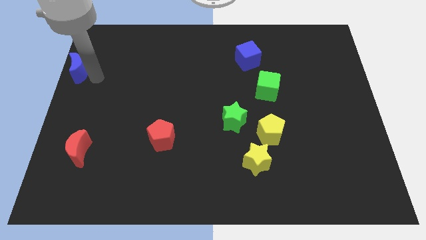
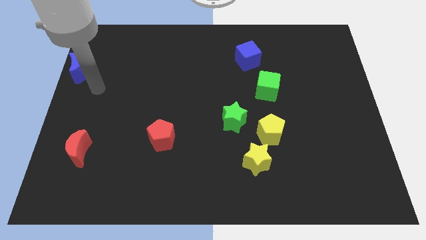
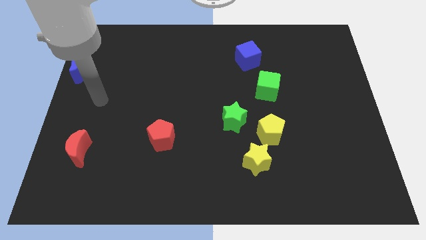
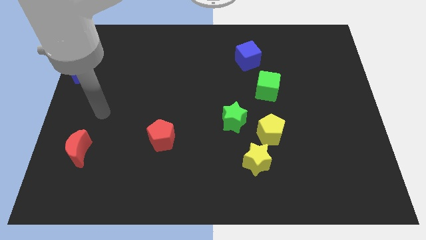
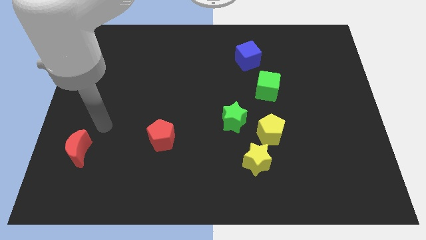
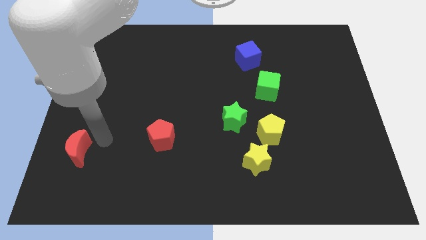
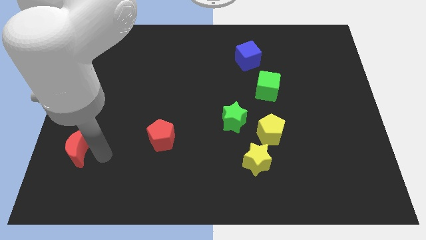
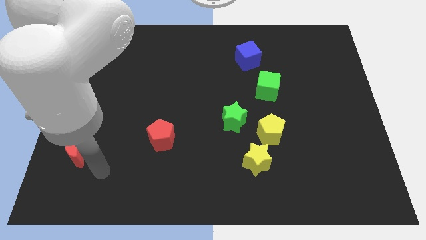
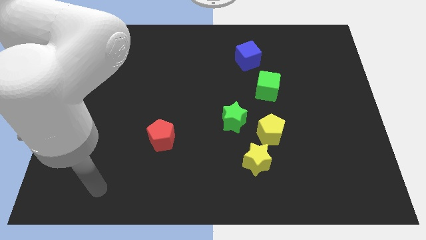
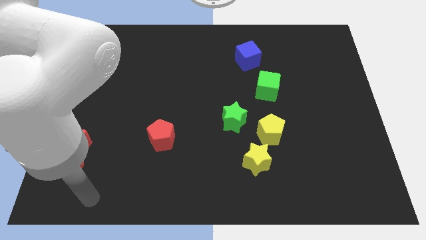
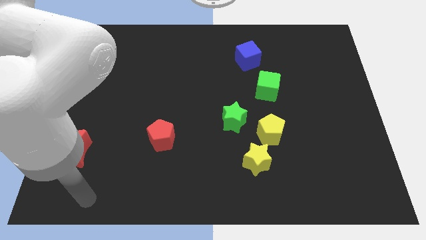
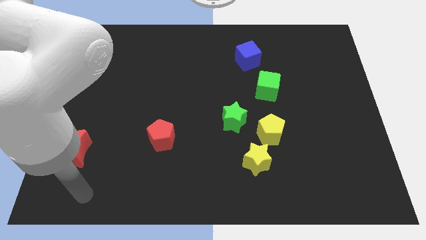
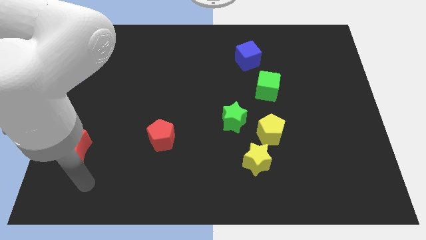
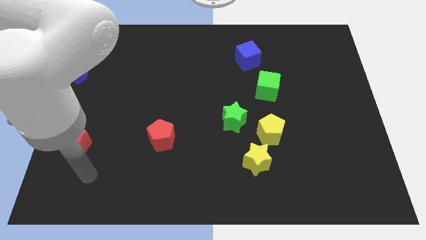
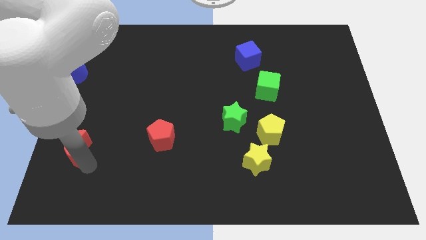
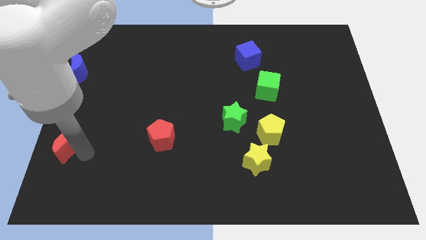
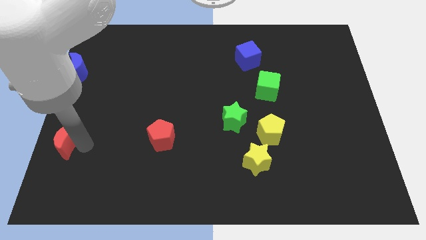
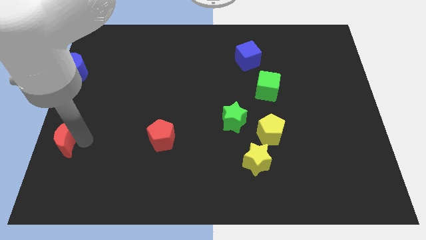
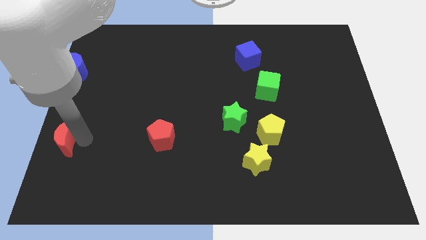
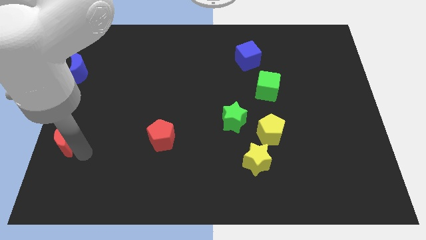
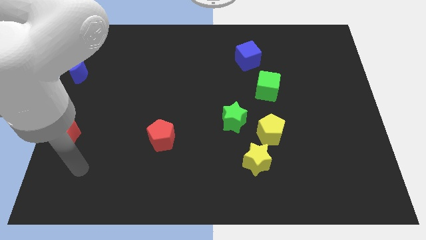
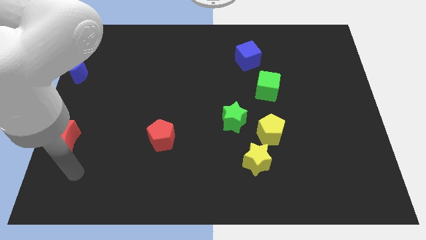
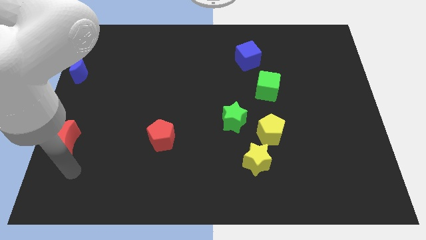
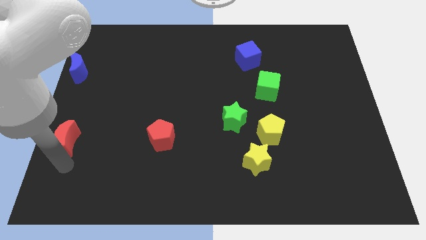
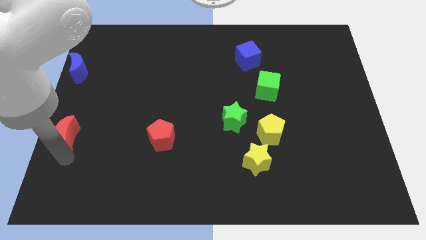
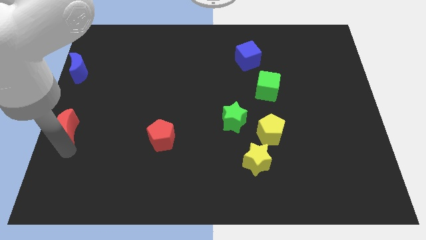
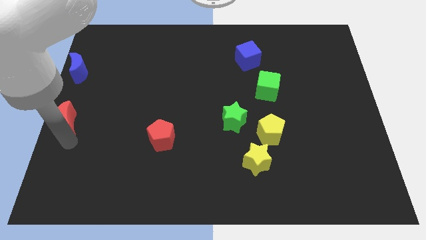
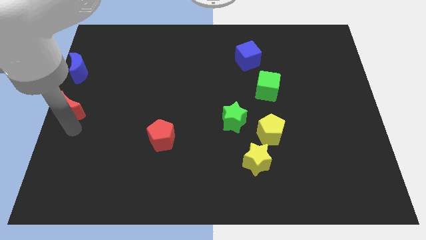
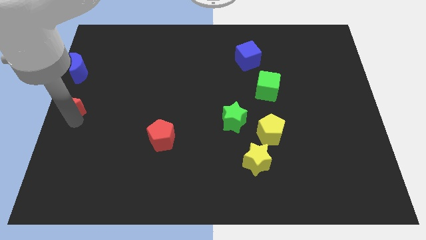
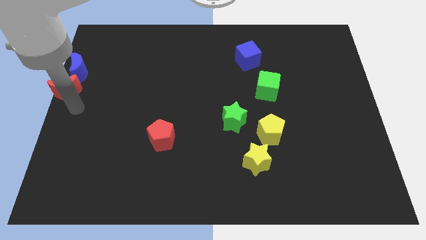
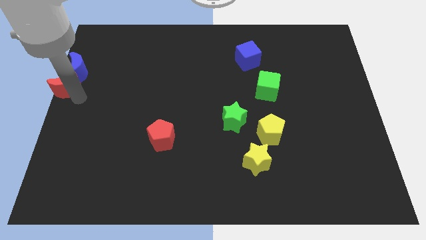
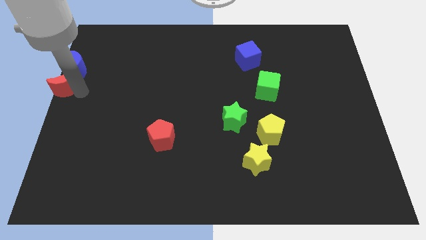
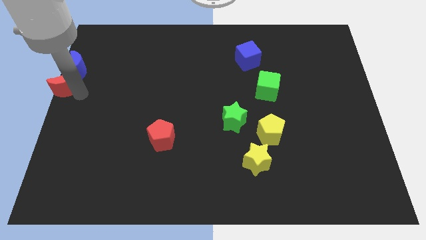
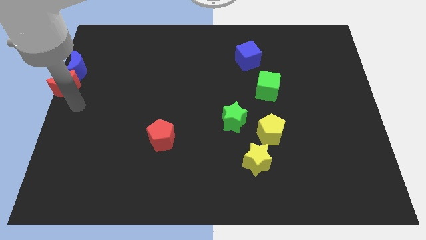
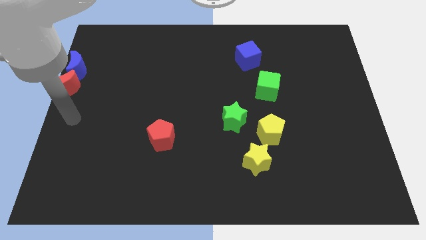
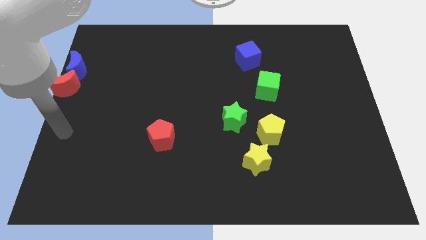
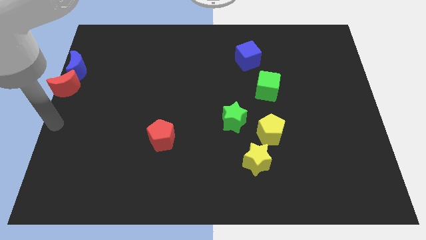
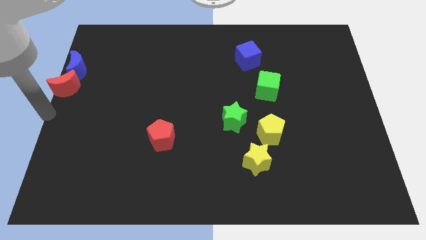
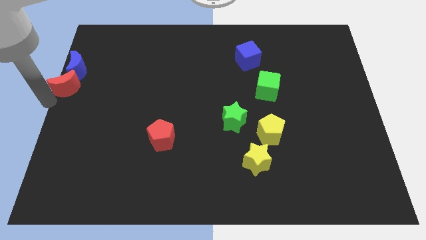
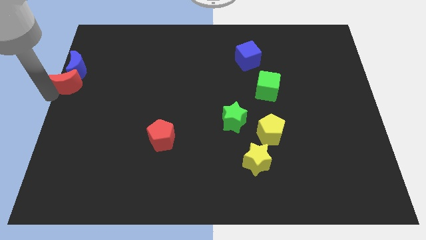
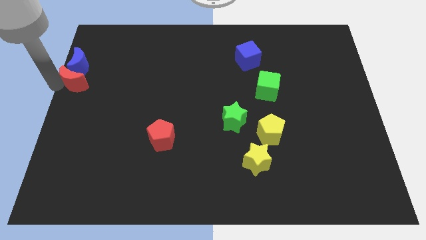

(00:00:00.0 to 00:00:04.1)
move the red crescent into the blue crescent

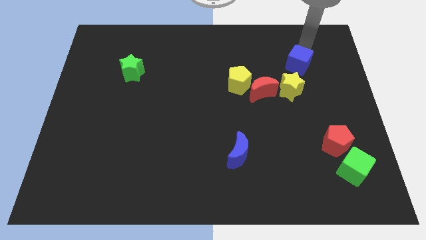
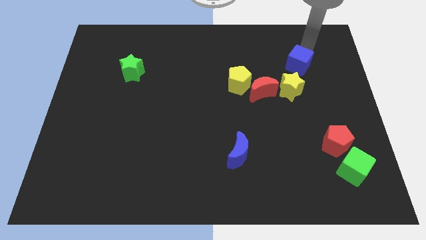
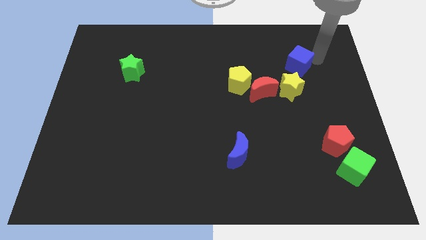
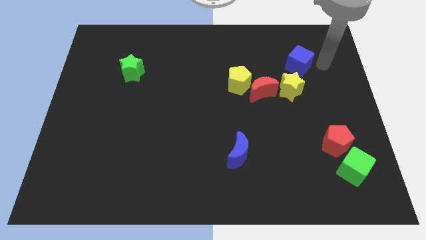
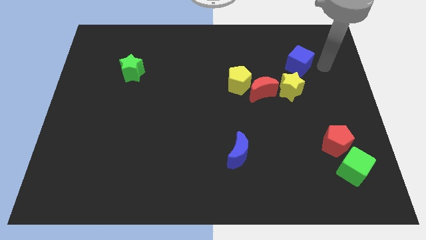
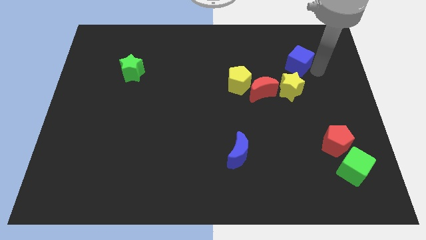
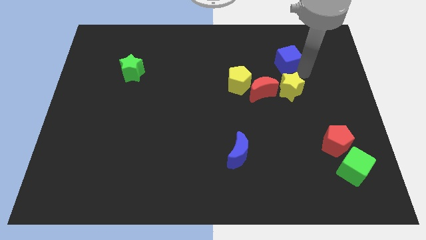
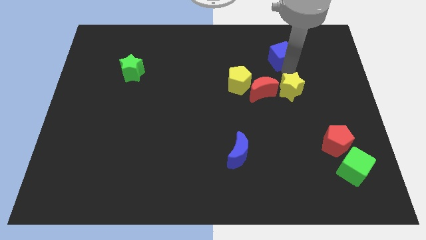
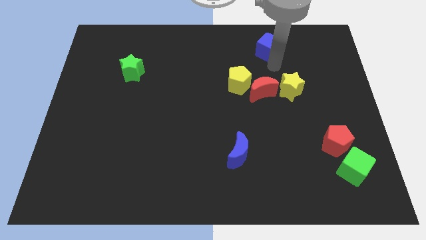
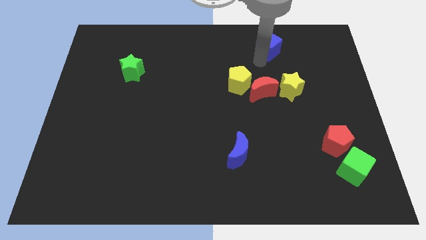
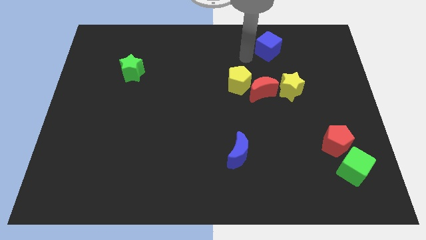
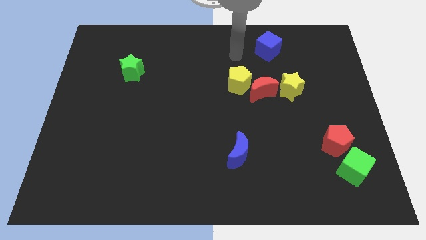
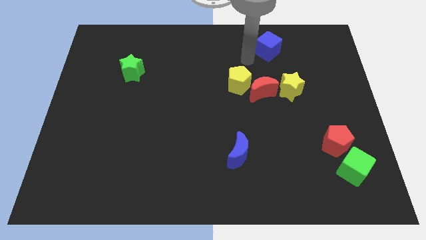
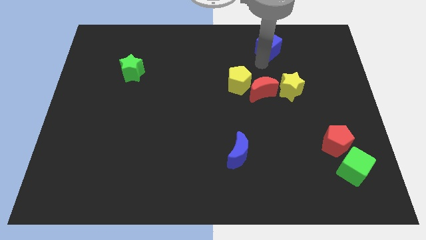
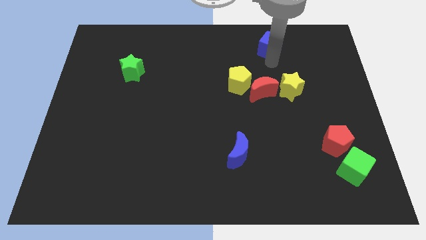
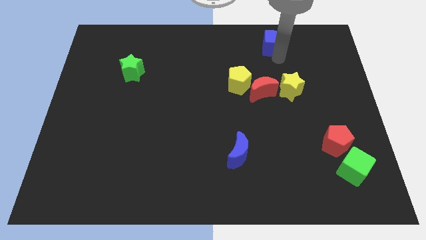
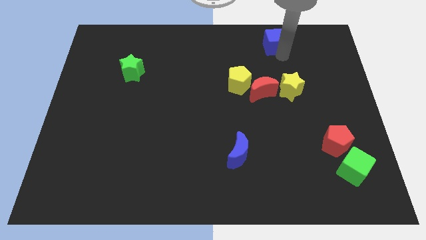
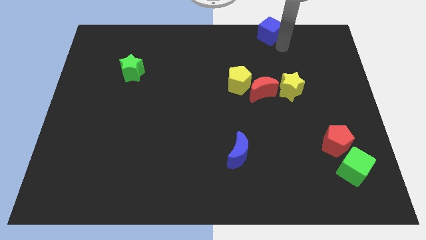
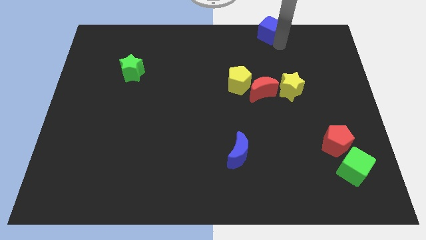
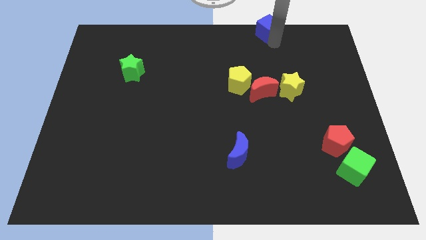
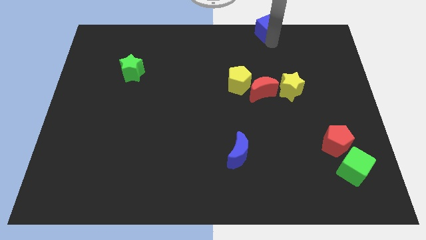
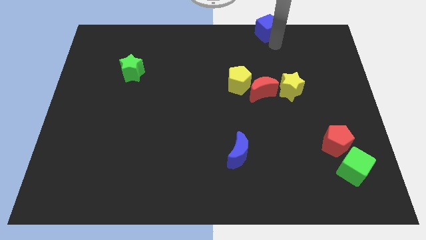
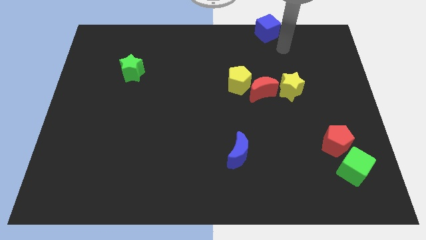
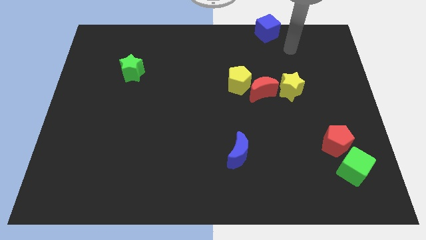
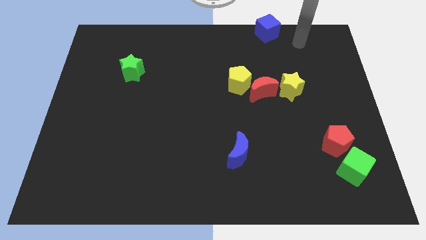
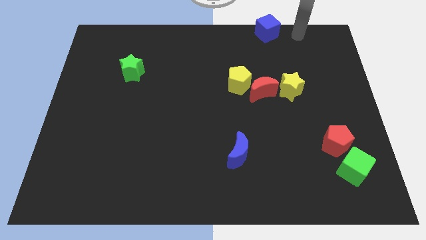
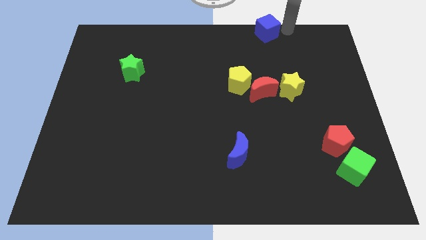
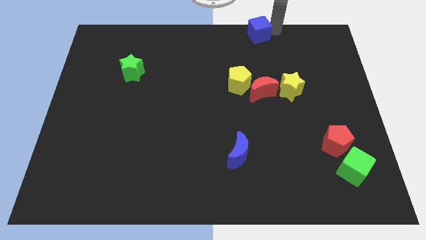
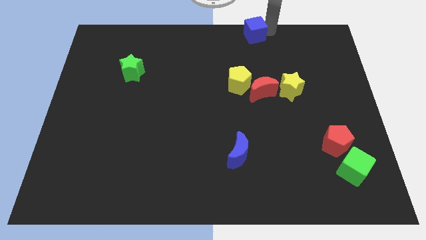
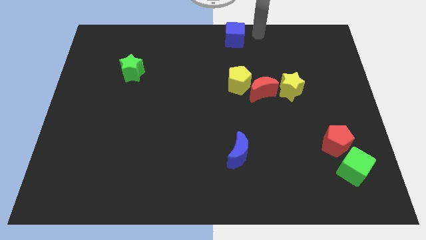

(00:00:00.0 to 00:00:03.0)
push the blue cube to top center

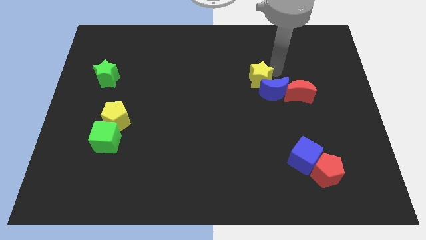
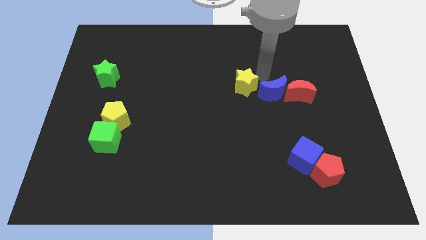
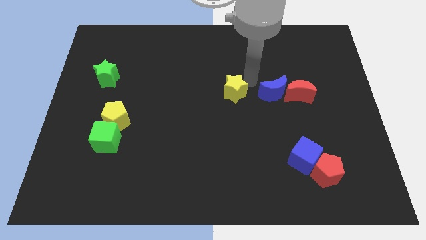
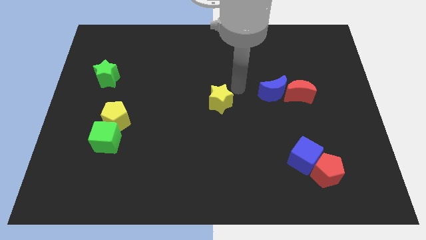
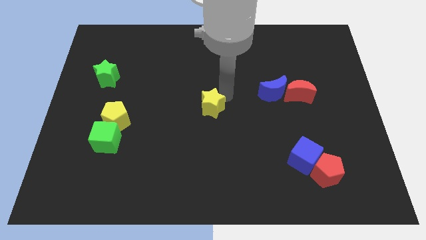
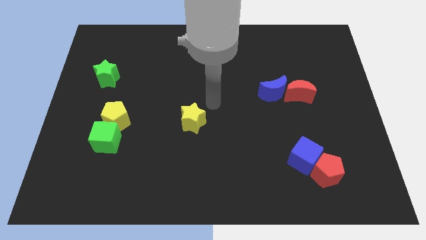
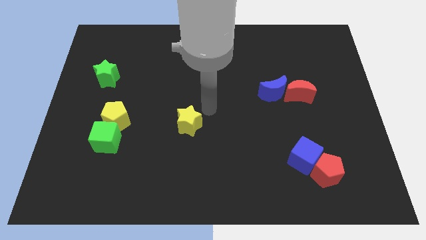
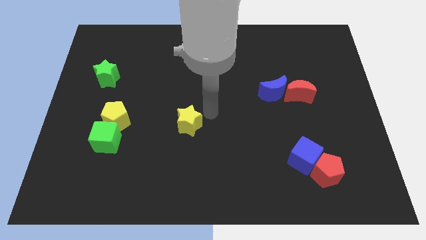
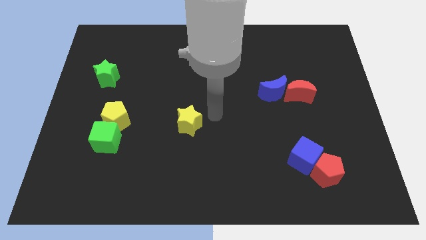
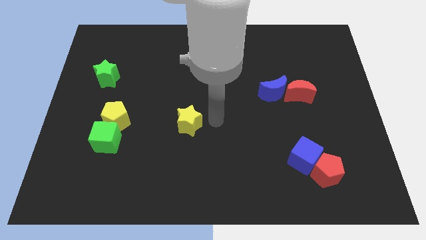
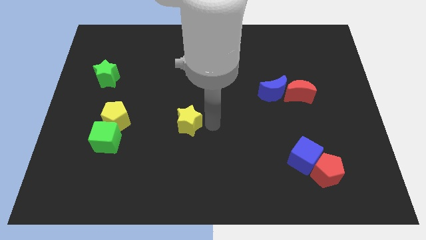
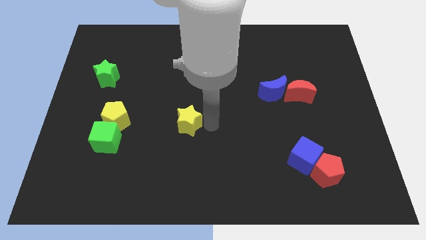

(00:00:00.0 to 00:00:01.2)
place the yellow star parallel to yellow pentagon

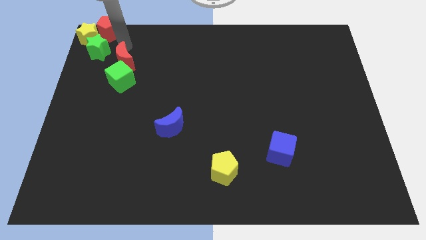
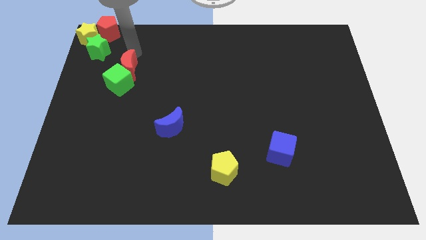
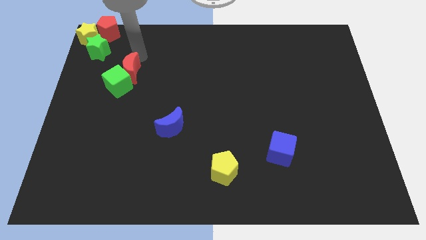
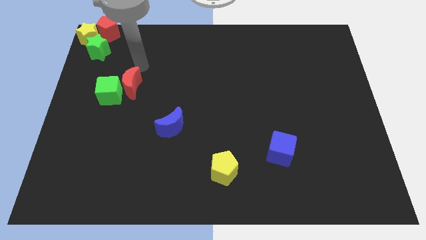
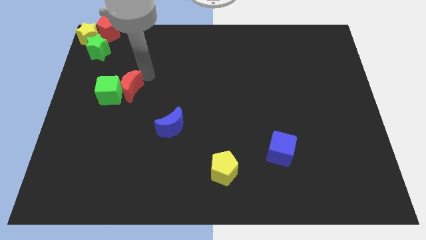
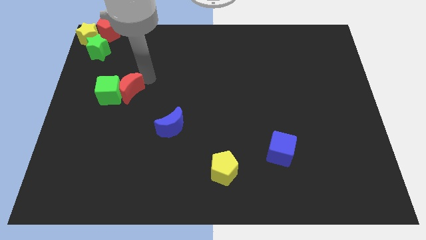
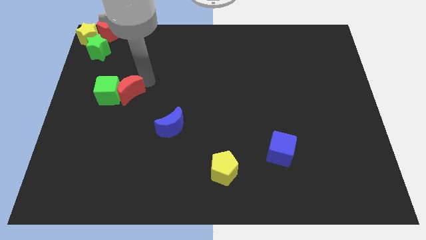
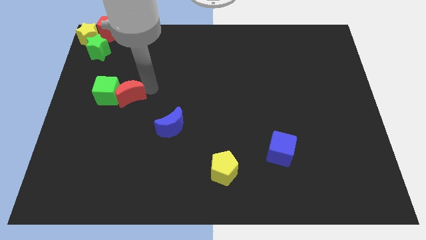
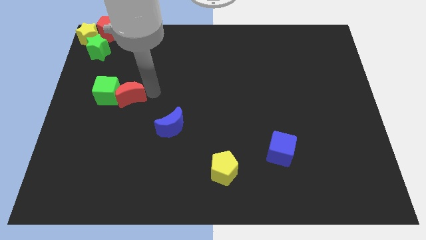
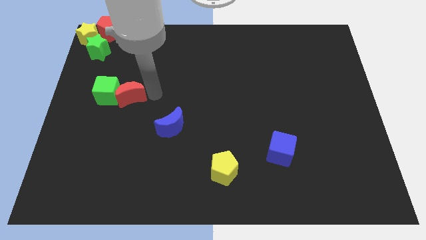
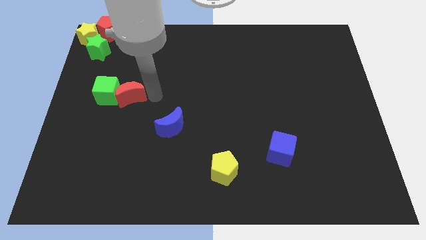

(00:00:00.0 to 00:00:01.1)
move the red moon into the right side of the green cube
